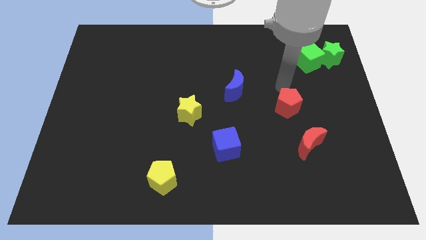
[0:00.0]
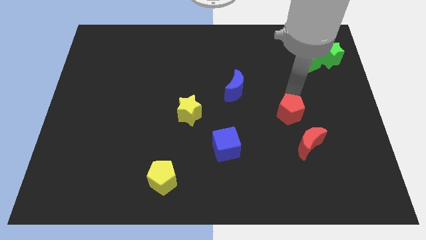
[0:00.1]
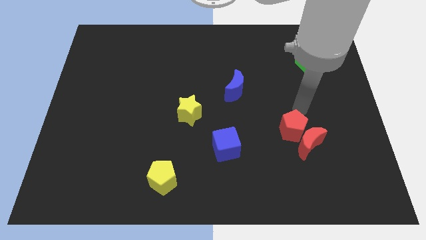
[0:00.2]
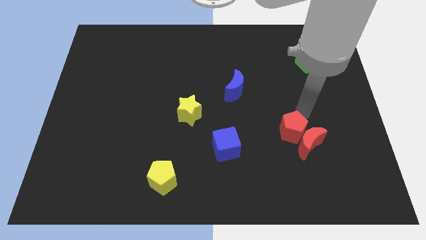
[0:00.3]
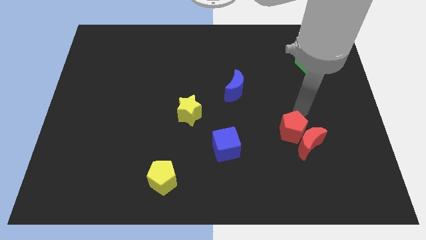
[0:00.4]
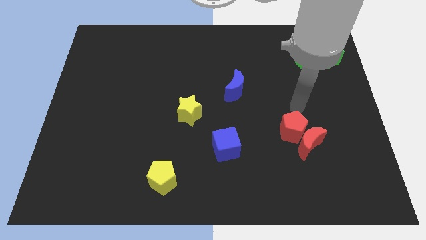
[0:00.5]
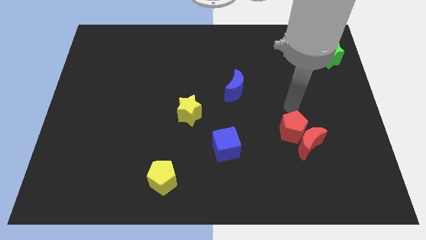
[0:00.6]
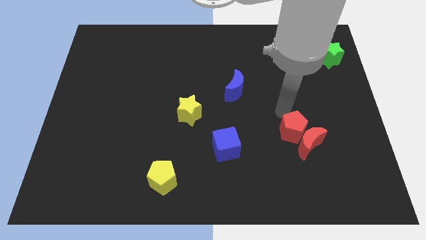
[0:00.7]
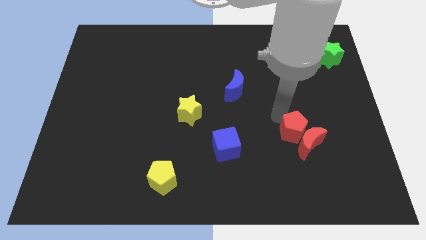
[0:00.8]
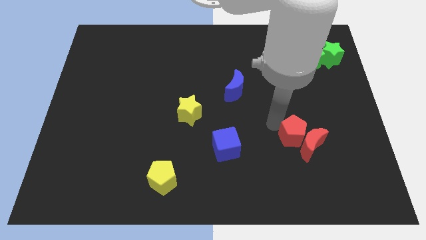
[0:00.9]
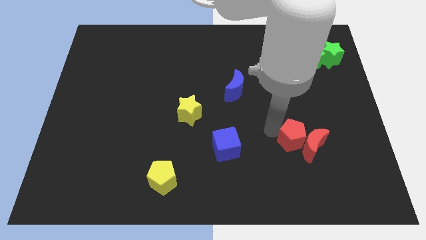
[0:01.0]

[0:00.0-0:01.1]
add red pentagon into red moon

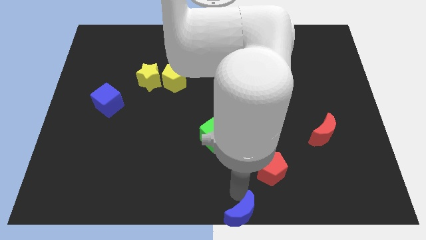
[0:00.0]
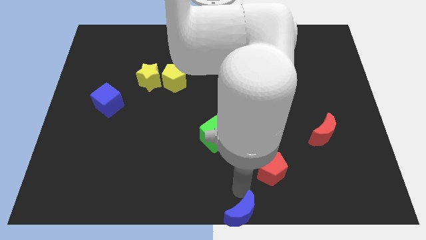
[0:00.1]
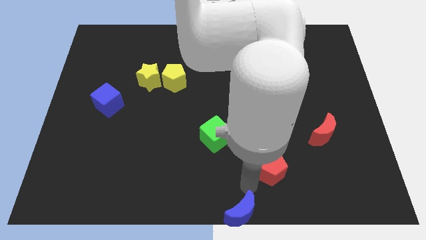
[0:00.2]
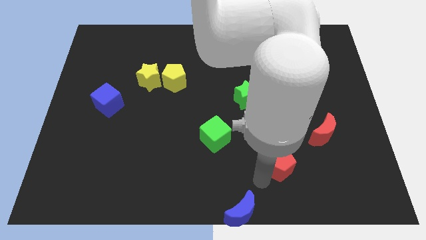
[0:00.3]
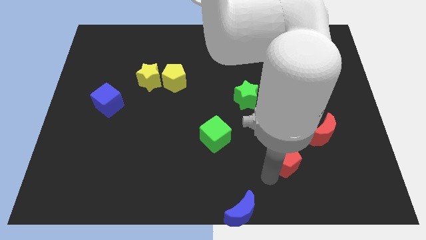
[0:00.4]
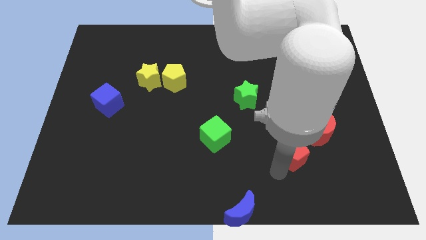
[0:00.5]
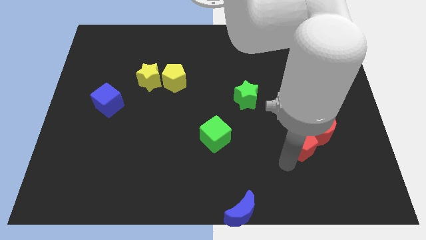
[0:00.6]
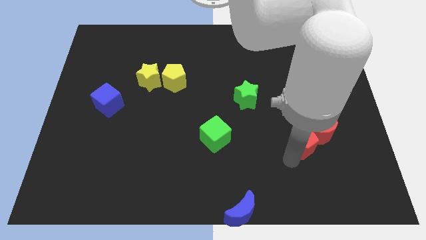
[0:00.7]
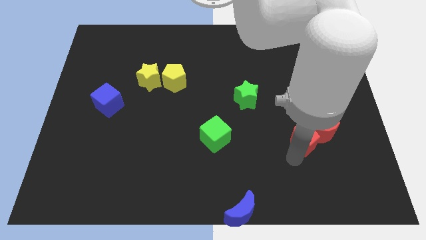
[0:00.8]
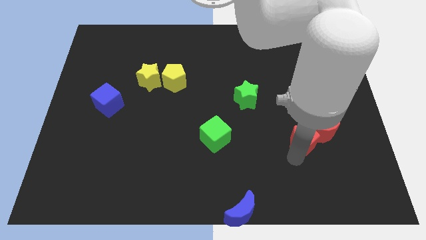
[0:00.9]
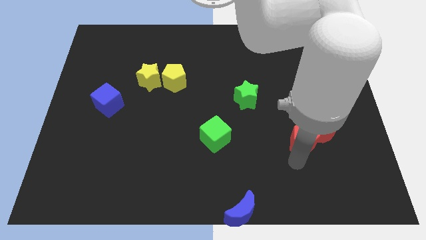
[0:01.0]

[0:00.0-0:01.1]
push red pentagon in red crescent

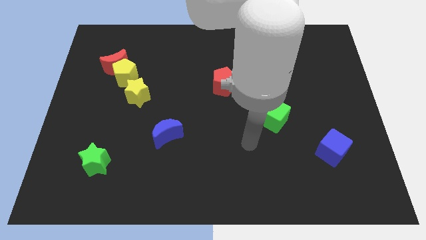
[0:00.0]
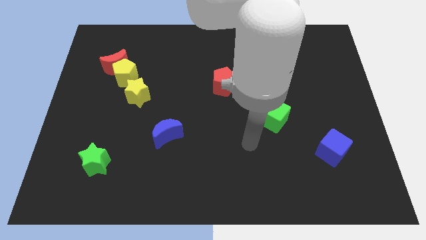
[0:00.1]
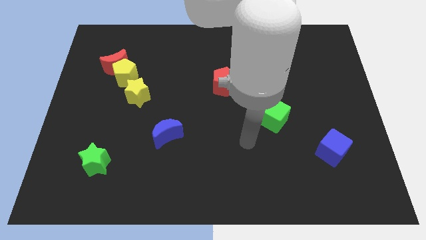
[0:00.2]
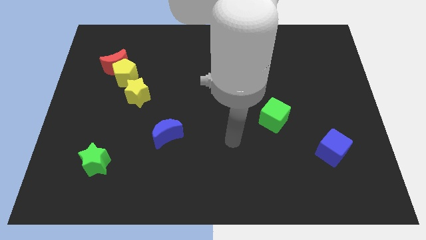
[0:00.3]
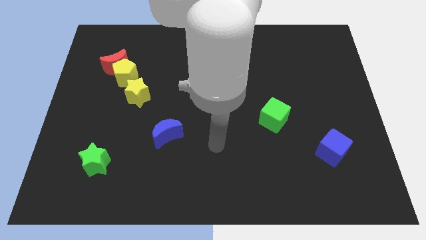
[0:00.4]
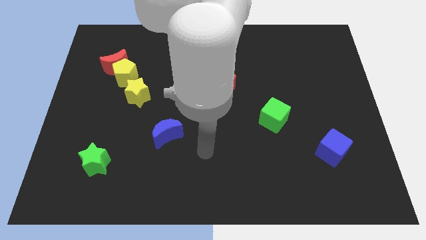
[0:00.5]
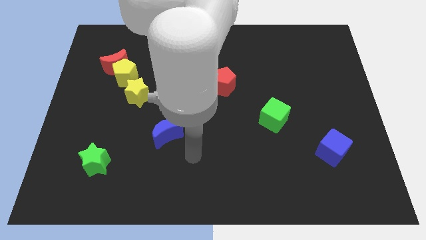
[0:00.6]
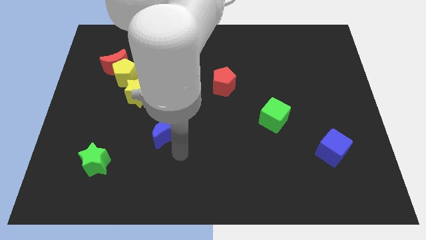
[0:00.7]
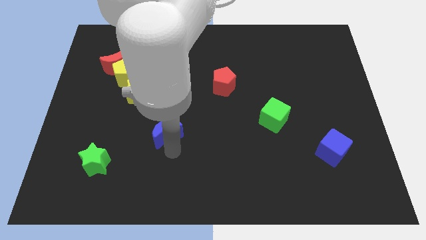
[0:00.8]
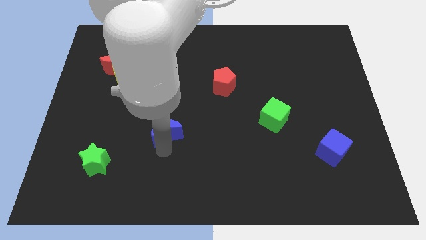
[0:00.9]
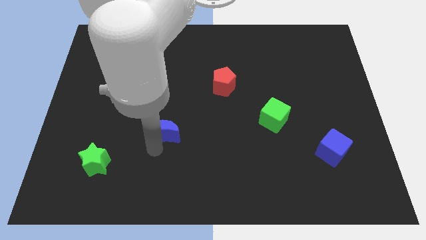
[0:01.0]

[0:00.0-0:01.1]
touch the blue moon with your arm

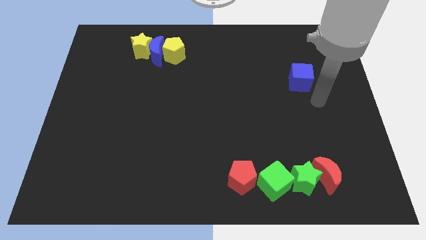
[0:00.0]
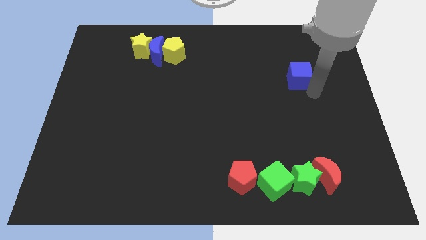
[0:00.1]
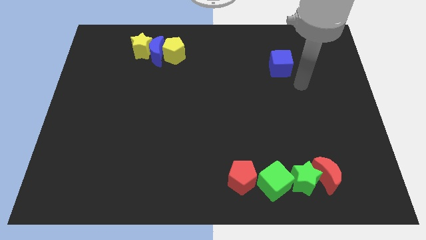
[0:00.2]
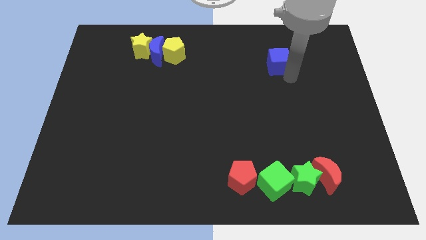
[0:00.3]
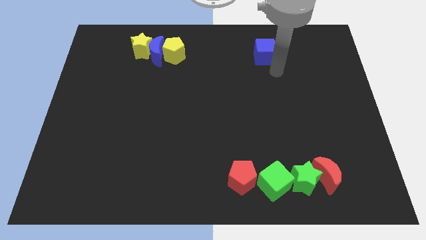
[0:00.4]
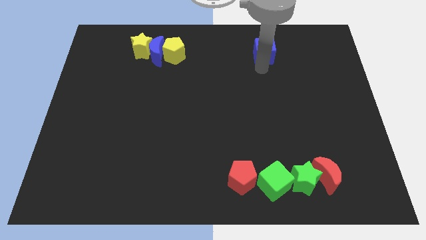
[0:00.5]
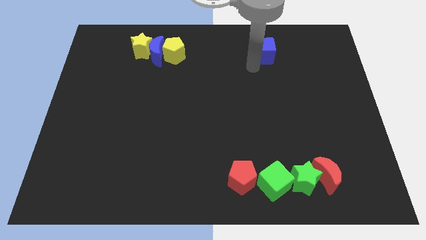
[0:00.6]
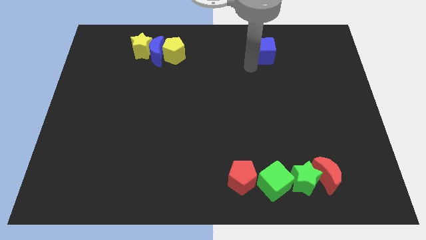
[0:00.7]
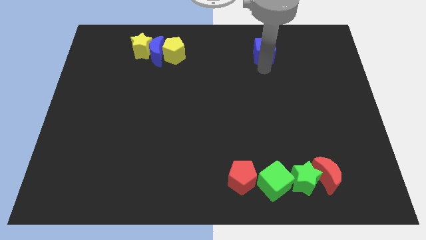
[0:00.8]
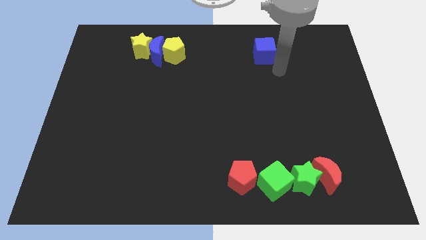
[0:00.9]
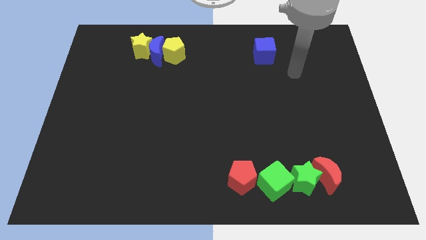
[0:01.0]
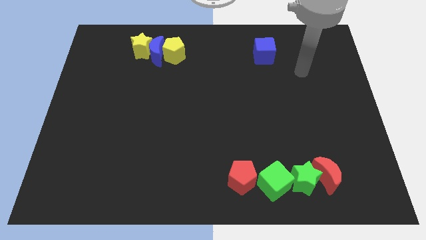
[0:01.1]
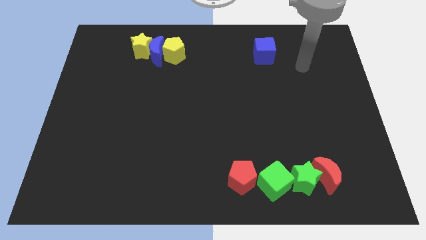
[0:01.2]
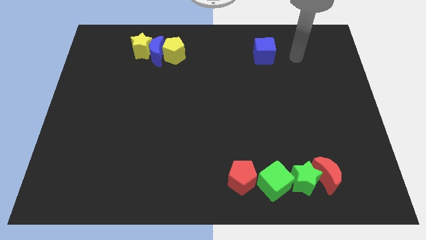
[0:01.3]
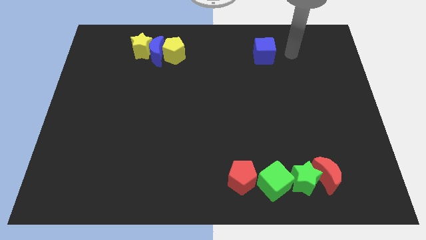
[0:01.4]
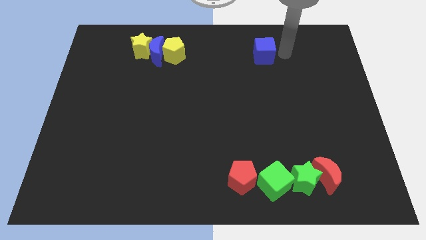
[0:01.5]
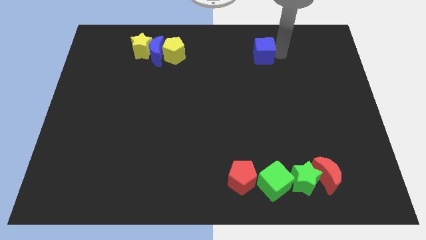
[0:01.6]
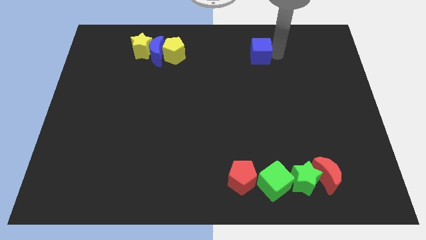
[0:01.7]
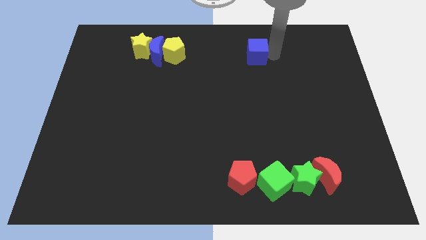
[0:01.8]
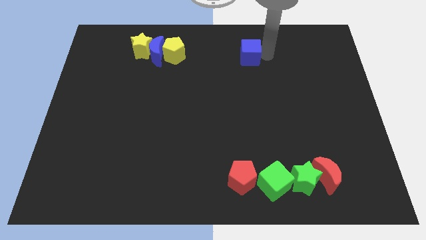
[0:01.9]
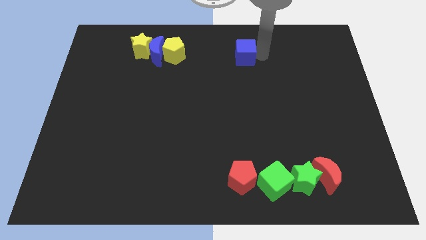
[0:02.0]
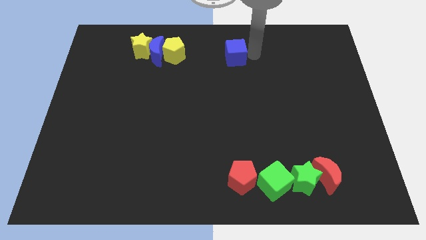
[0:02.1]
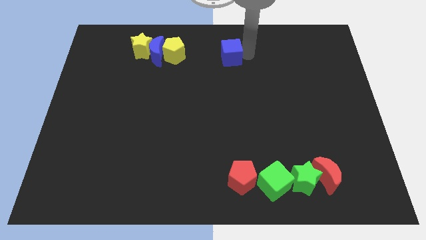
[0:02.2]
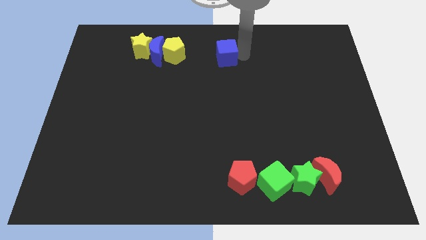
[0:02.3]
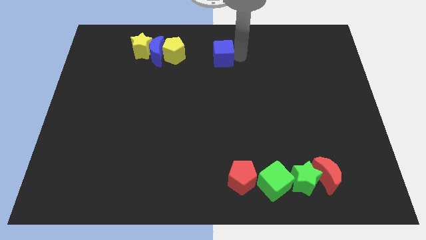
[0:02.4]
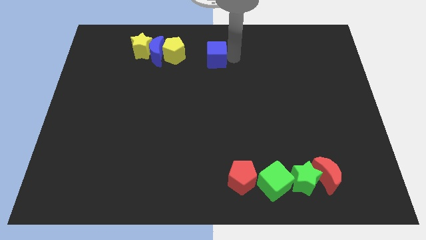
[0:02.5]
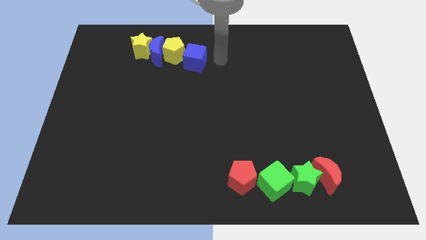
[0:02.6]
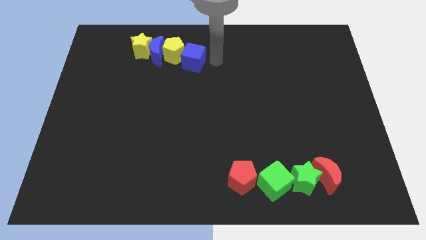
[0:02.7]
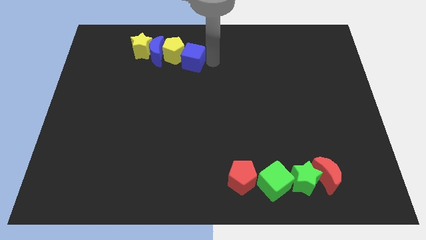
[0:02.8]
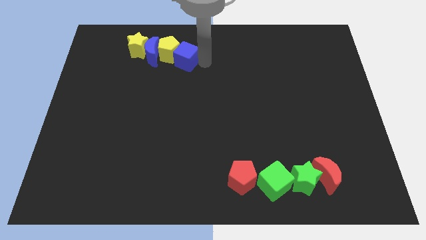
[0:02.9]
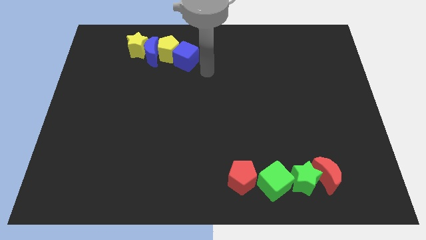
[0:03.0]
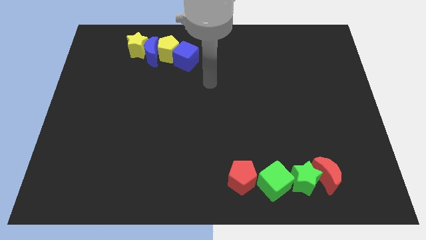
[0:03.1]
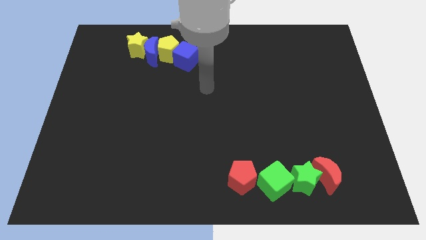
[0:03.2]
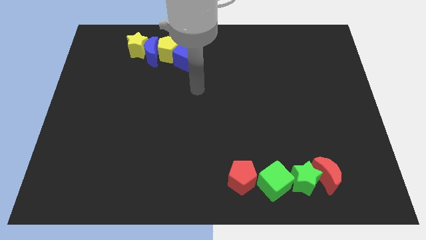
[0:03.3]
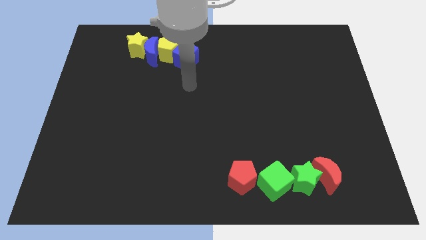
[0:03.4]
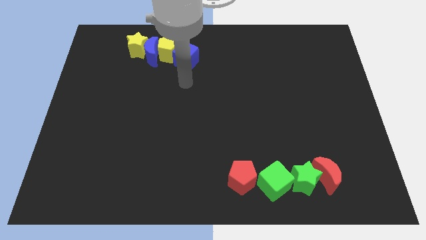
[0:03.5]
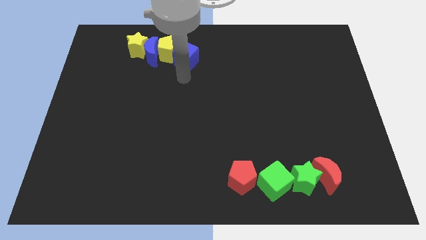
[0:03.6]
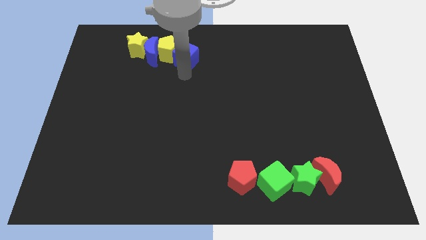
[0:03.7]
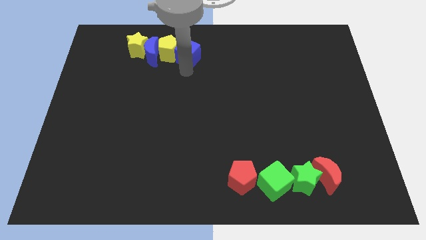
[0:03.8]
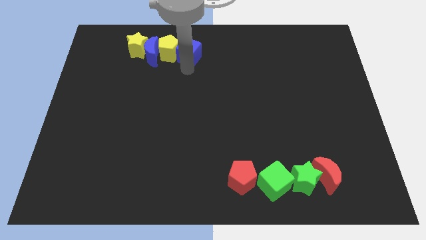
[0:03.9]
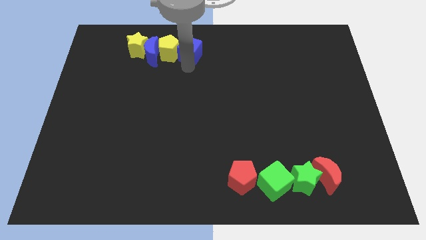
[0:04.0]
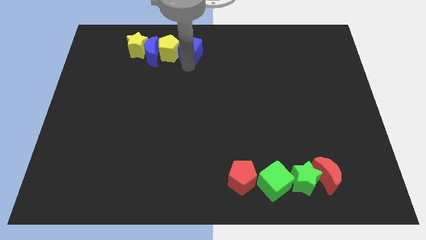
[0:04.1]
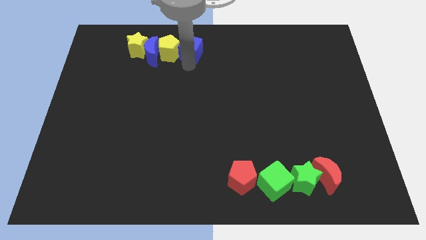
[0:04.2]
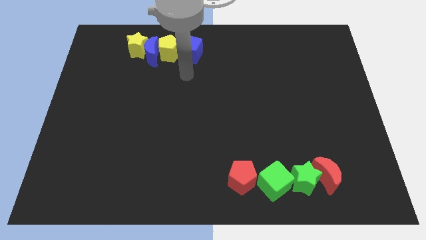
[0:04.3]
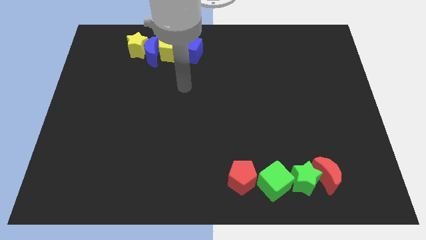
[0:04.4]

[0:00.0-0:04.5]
place the blue cube to the right side of the yellow pentagon

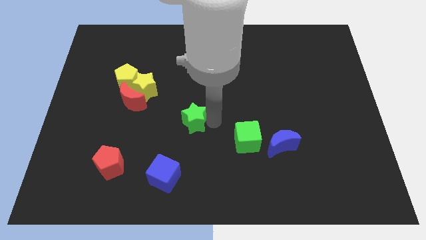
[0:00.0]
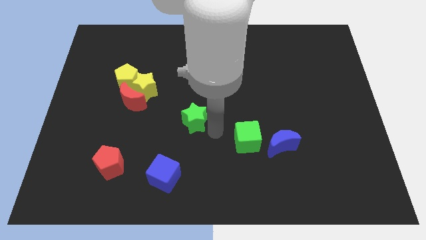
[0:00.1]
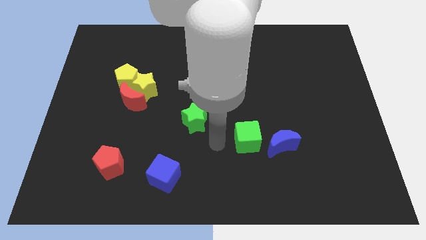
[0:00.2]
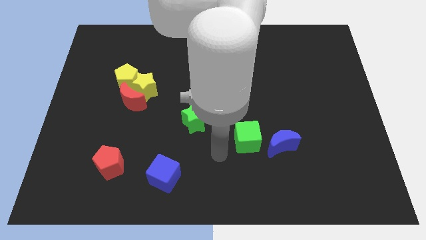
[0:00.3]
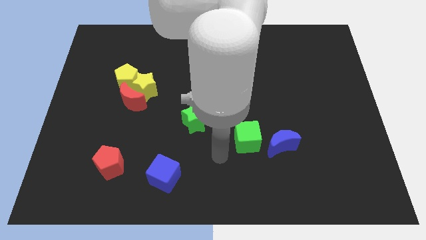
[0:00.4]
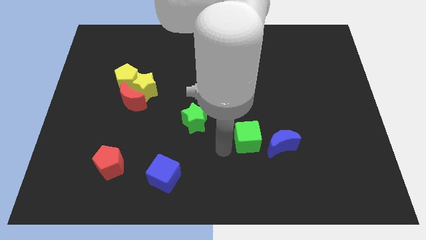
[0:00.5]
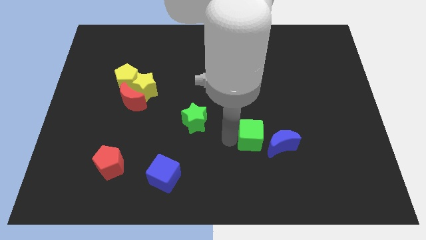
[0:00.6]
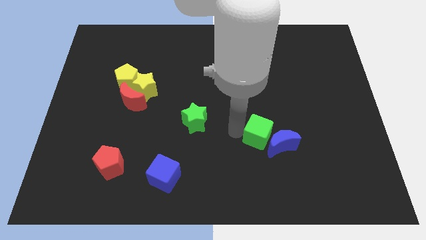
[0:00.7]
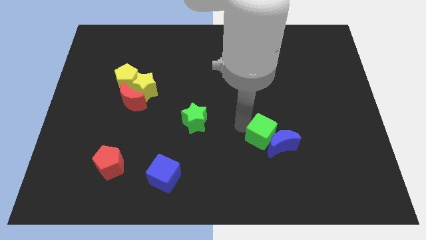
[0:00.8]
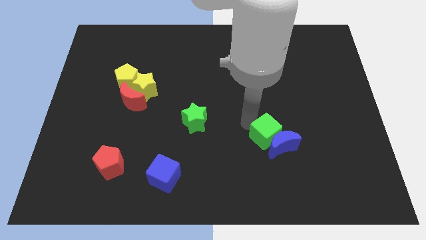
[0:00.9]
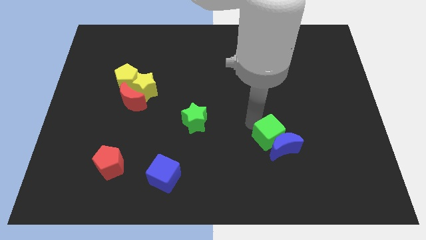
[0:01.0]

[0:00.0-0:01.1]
slide green cube into blue moon
